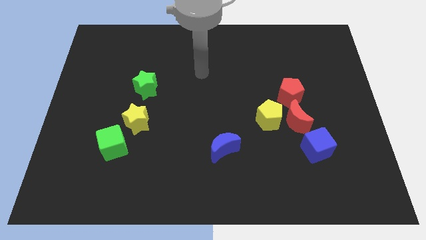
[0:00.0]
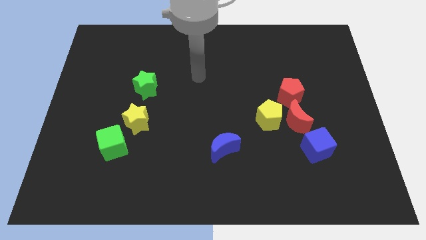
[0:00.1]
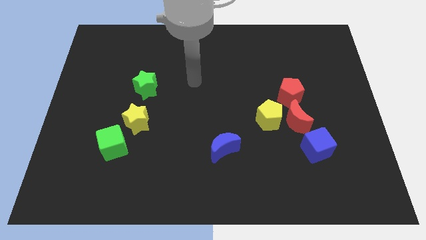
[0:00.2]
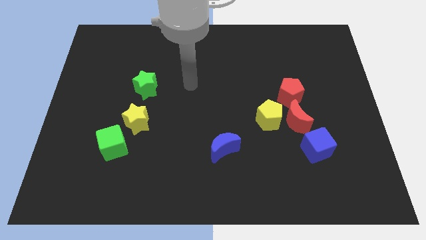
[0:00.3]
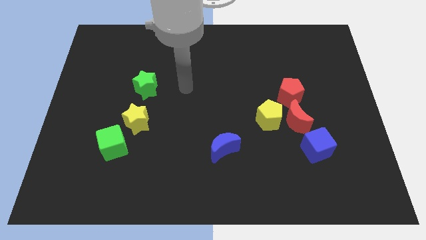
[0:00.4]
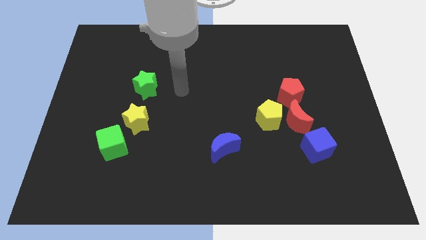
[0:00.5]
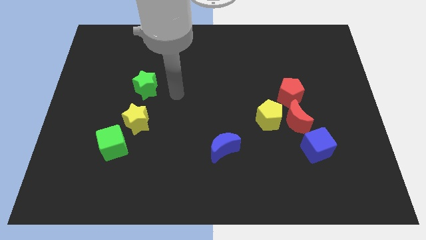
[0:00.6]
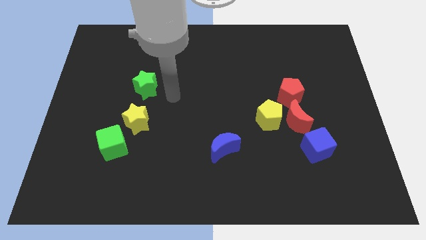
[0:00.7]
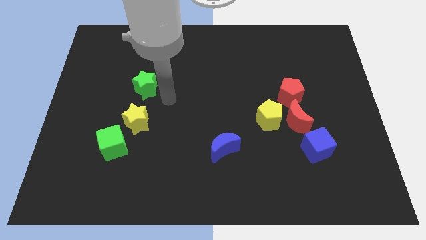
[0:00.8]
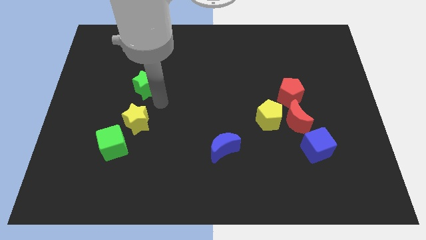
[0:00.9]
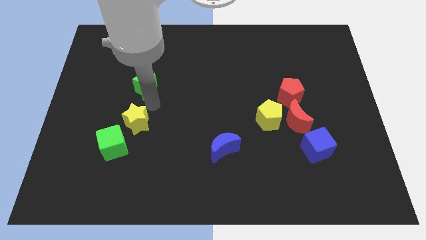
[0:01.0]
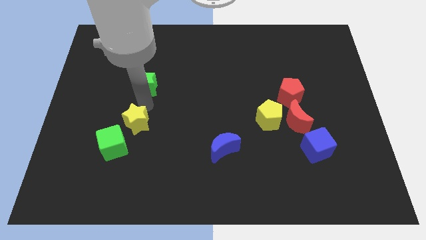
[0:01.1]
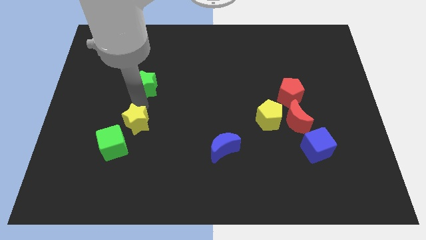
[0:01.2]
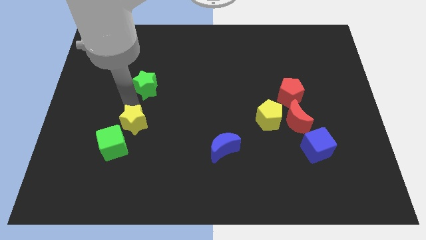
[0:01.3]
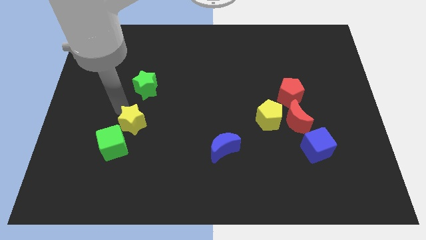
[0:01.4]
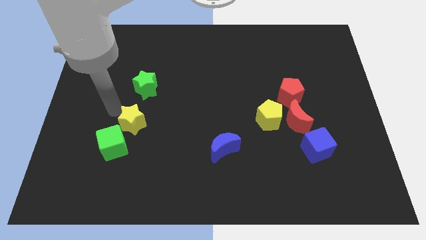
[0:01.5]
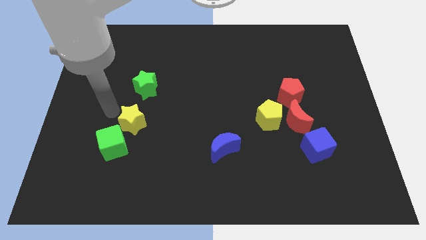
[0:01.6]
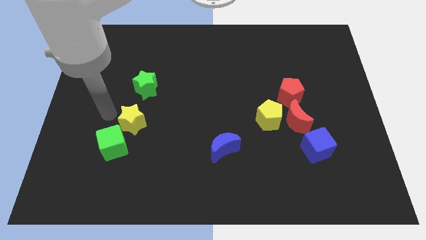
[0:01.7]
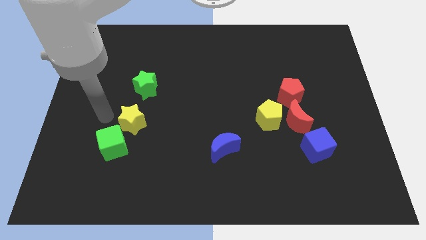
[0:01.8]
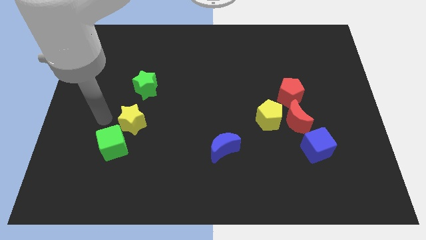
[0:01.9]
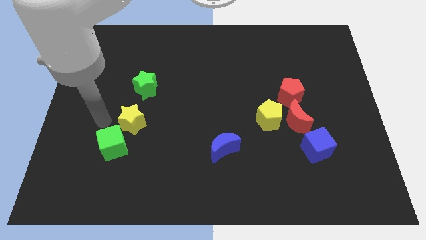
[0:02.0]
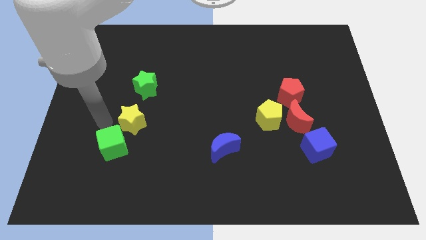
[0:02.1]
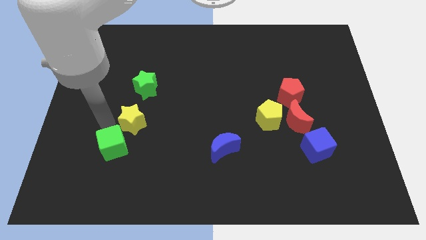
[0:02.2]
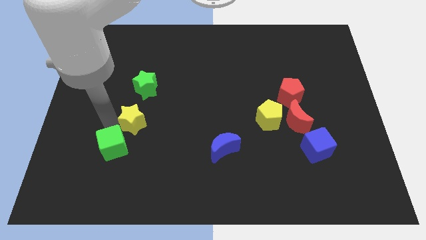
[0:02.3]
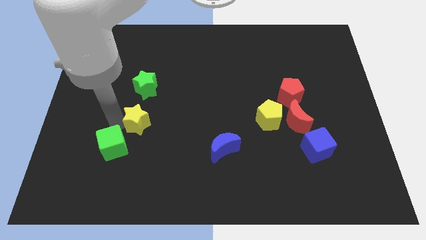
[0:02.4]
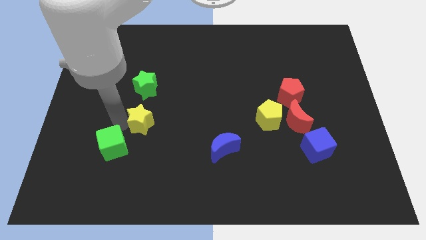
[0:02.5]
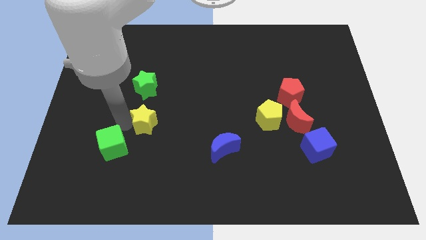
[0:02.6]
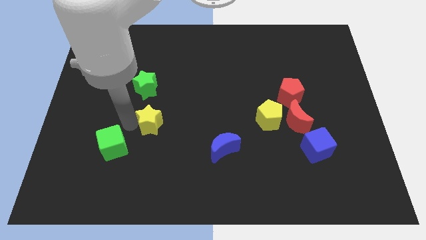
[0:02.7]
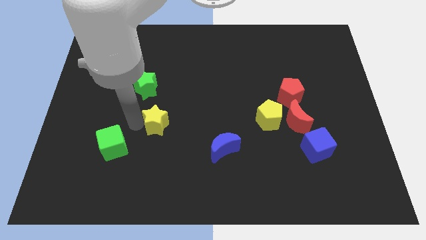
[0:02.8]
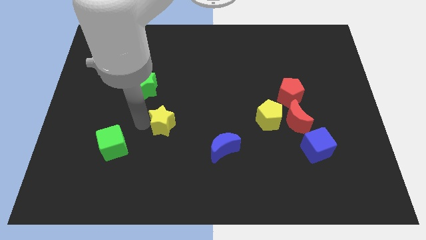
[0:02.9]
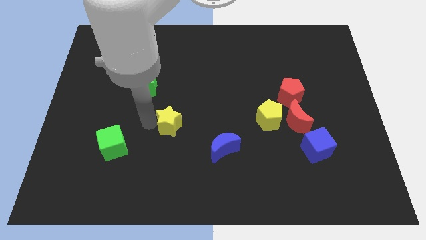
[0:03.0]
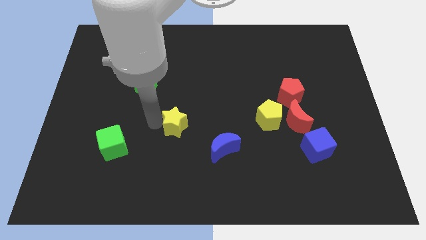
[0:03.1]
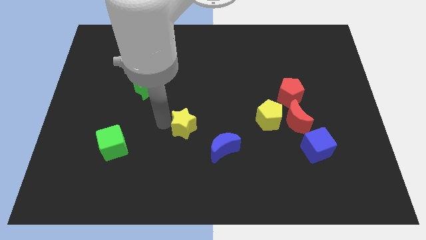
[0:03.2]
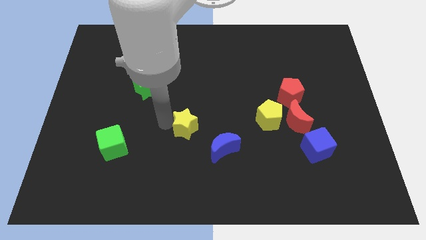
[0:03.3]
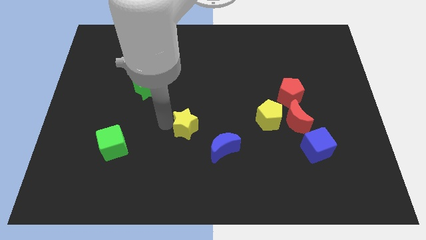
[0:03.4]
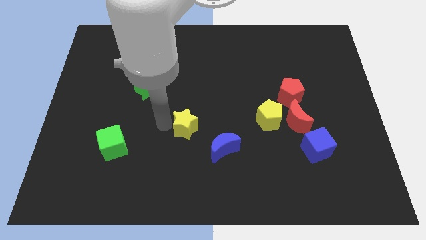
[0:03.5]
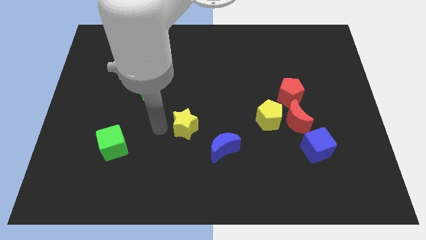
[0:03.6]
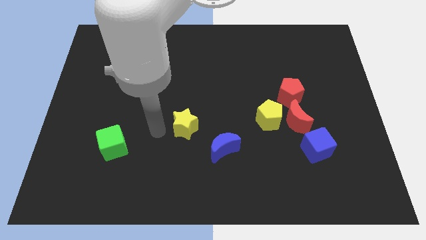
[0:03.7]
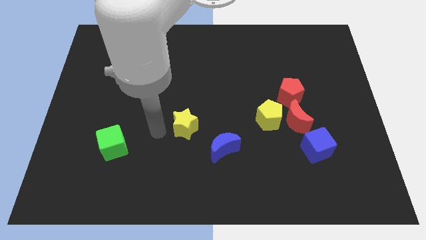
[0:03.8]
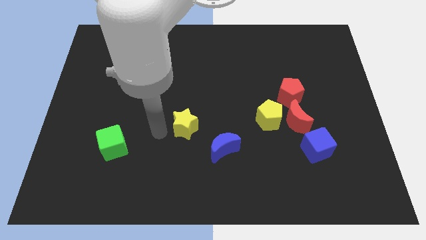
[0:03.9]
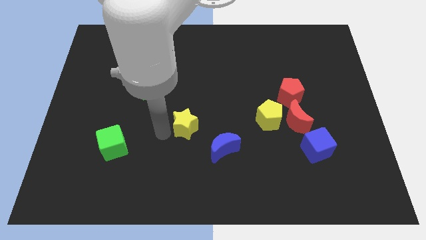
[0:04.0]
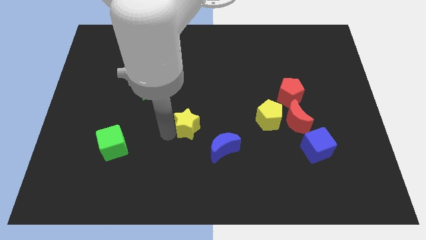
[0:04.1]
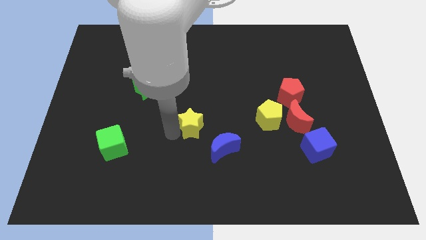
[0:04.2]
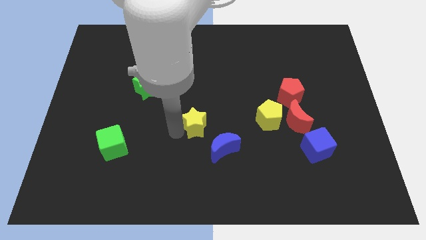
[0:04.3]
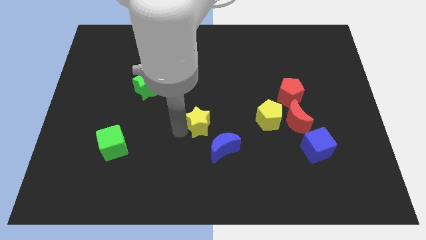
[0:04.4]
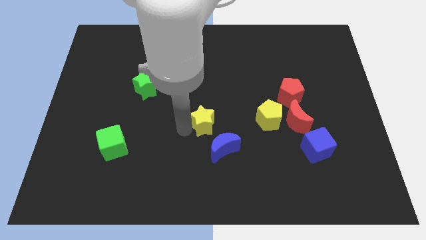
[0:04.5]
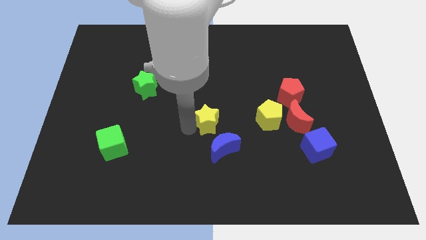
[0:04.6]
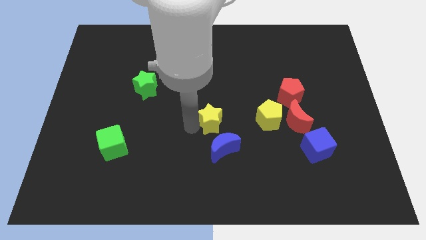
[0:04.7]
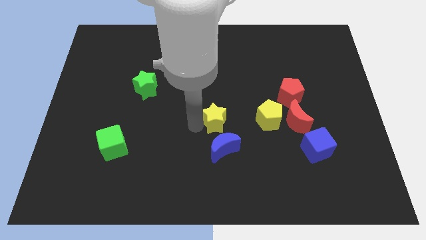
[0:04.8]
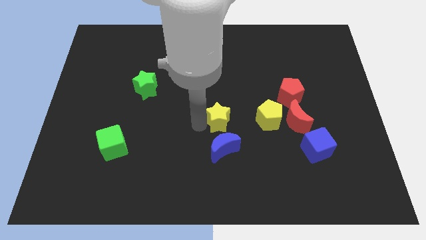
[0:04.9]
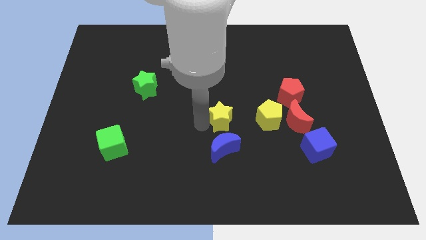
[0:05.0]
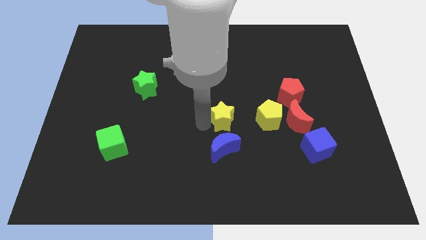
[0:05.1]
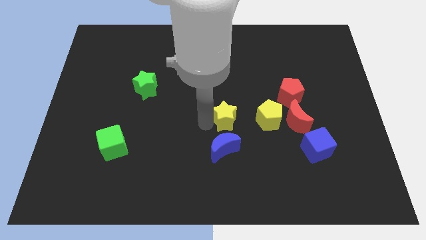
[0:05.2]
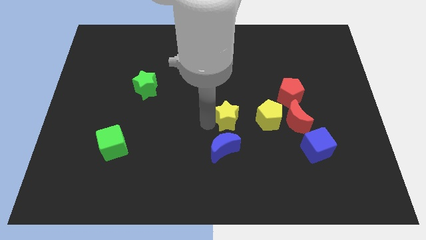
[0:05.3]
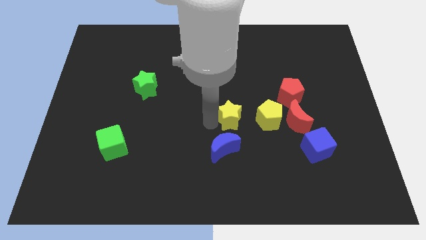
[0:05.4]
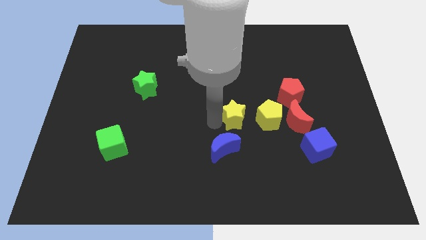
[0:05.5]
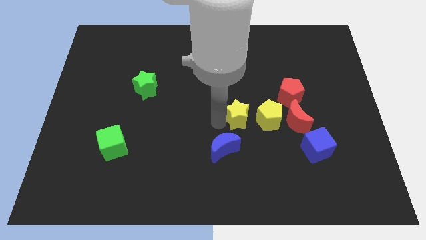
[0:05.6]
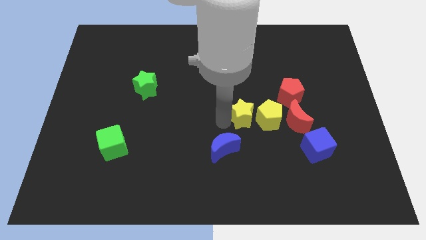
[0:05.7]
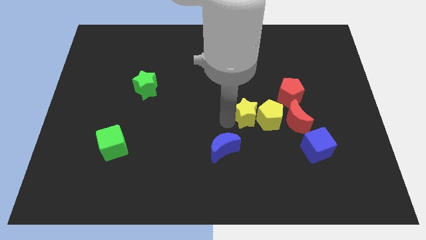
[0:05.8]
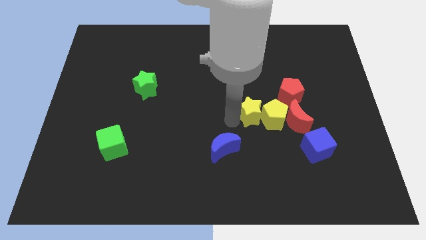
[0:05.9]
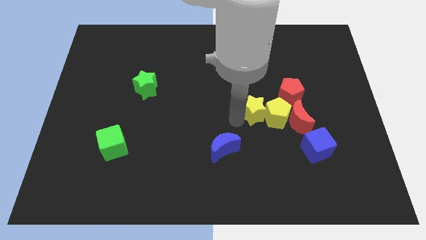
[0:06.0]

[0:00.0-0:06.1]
slide the yellow star towards the yellow pentagon

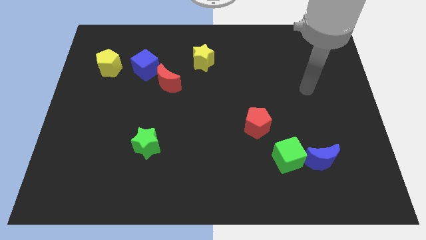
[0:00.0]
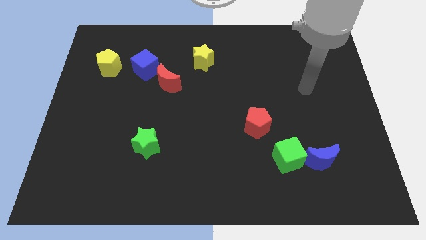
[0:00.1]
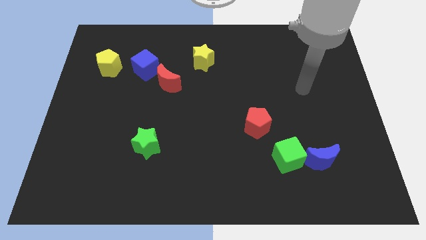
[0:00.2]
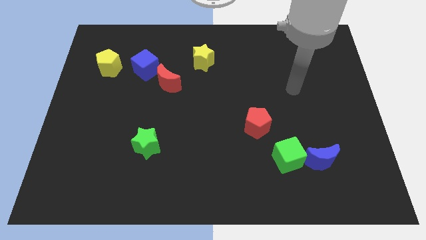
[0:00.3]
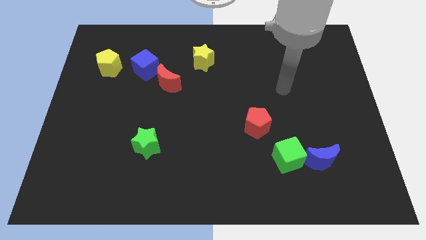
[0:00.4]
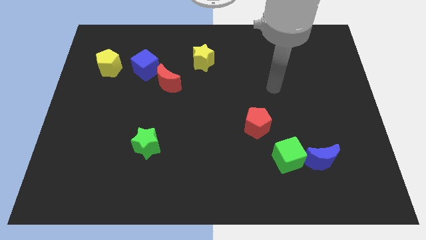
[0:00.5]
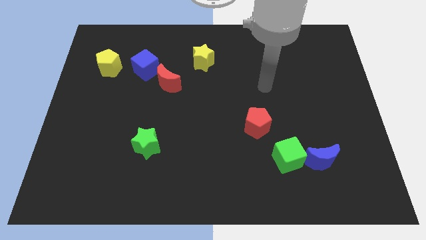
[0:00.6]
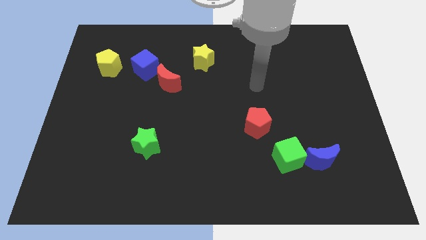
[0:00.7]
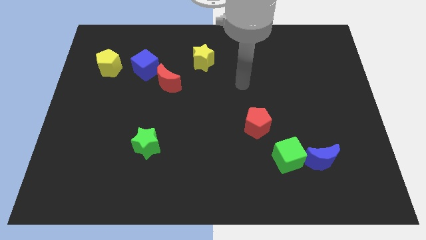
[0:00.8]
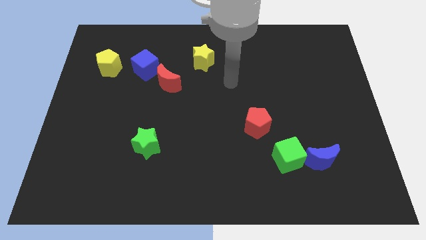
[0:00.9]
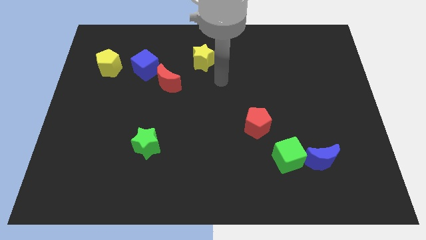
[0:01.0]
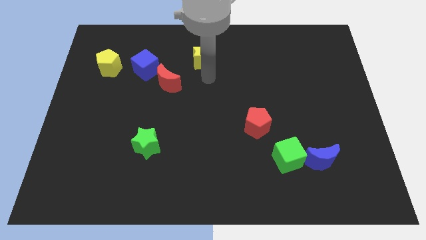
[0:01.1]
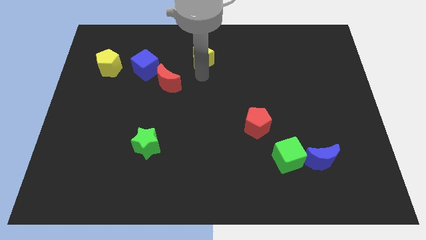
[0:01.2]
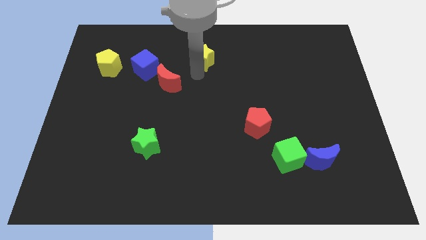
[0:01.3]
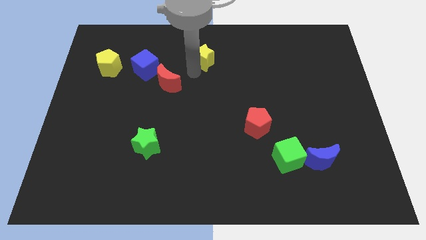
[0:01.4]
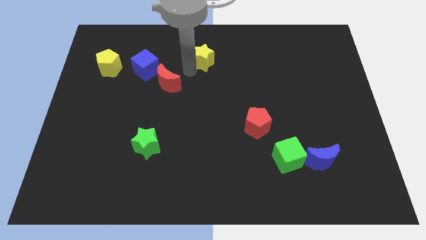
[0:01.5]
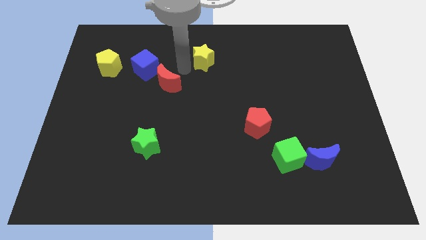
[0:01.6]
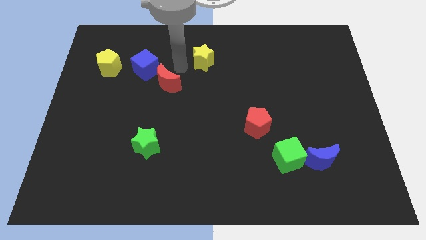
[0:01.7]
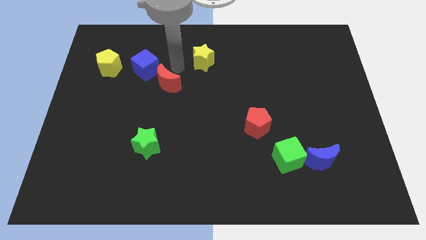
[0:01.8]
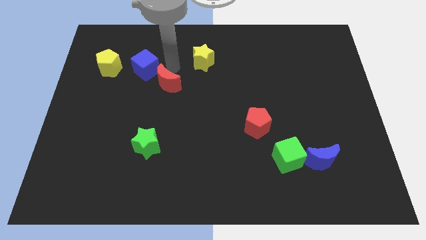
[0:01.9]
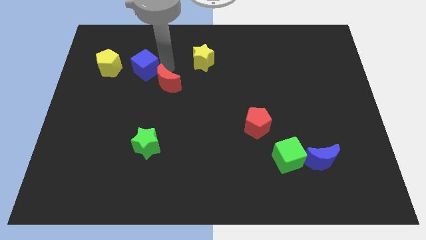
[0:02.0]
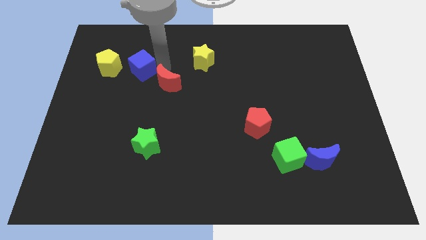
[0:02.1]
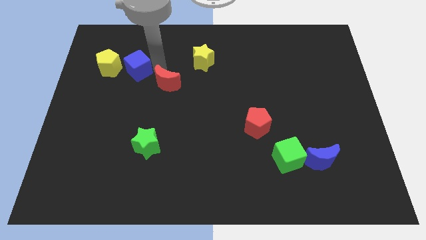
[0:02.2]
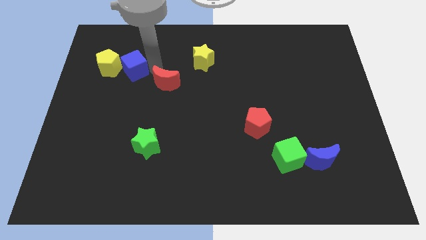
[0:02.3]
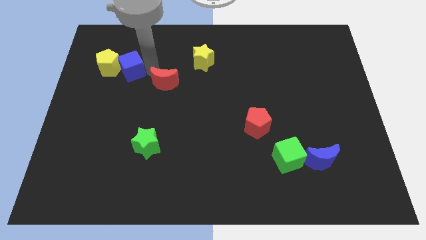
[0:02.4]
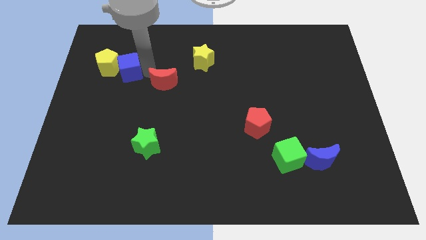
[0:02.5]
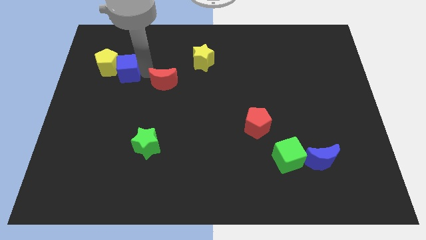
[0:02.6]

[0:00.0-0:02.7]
move the blue cube towards the yellow pentagon
